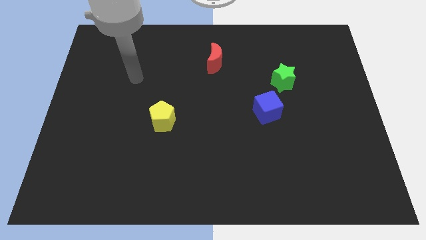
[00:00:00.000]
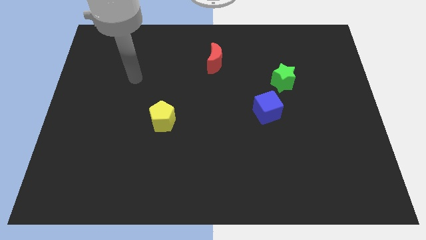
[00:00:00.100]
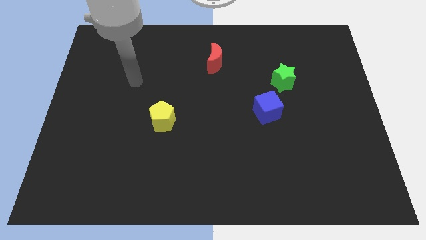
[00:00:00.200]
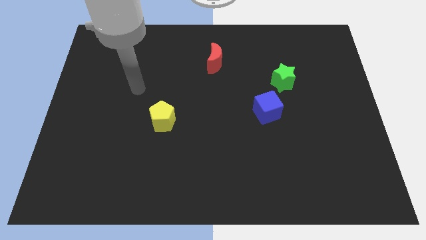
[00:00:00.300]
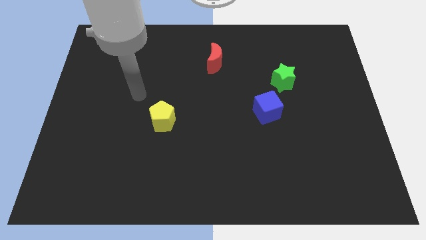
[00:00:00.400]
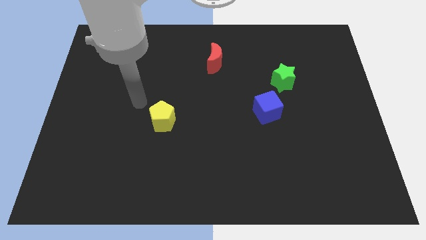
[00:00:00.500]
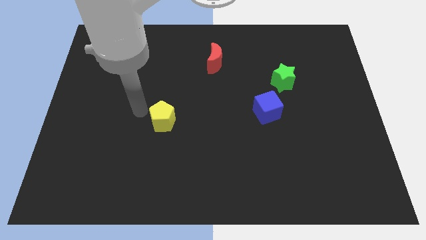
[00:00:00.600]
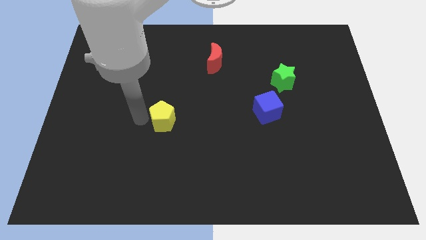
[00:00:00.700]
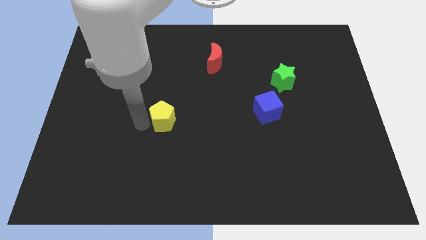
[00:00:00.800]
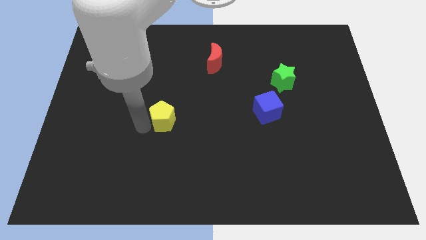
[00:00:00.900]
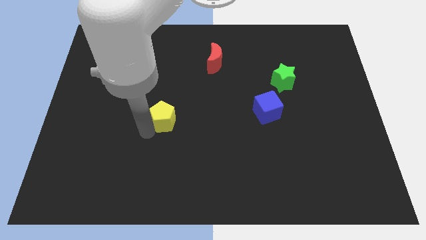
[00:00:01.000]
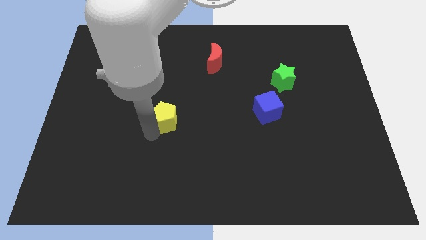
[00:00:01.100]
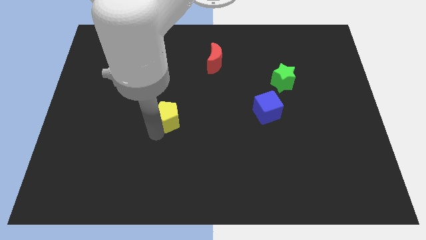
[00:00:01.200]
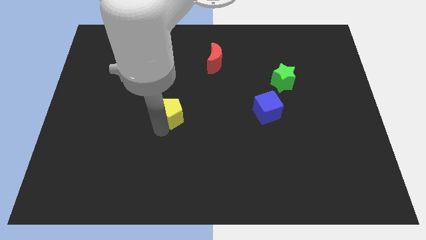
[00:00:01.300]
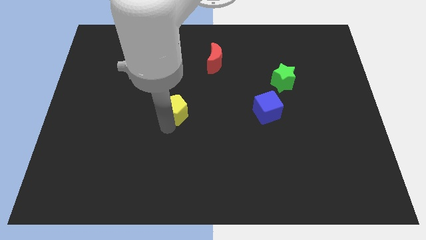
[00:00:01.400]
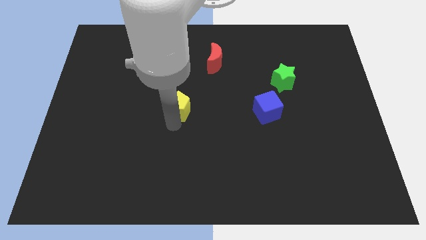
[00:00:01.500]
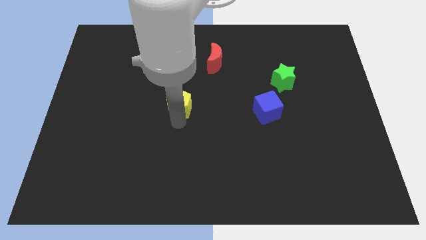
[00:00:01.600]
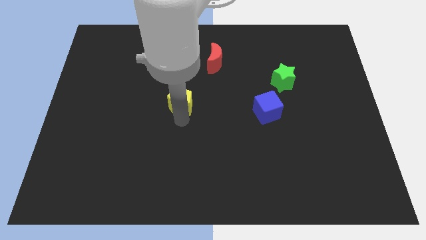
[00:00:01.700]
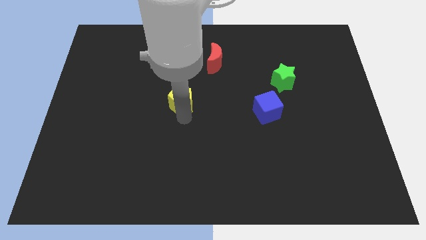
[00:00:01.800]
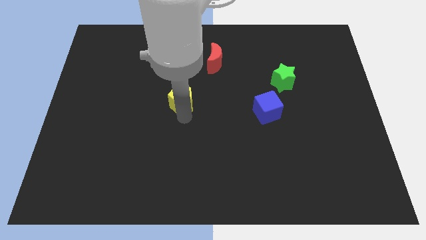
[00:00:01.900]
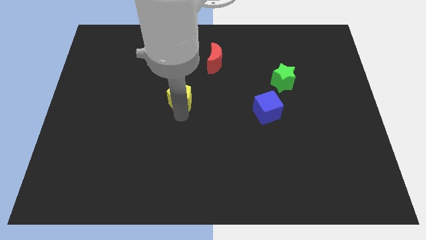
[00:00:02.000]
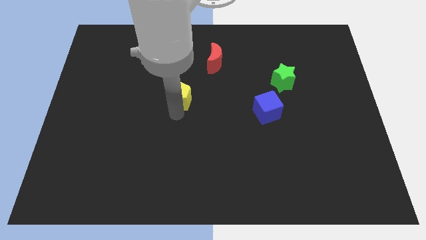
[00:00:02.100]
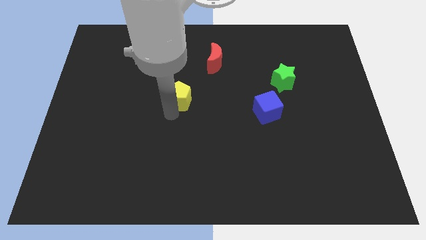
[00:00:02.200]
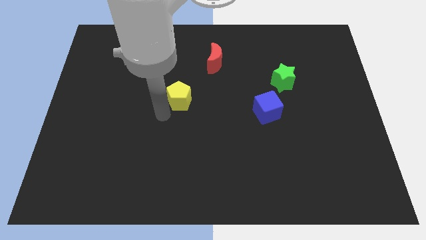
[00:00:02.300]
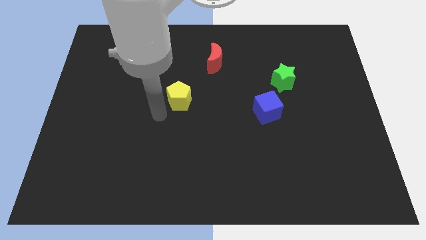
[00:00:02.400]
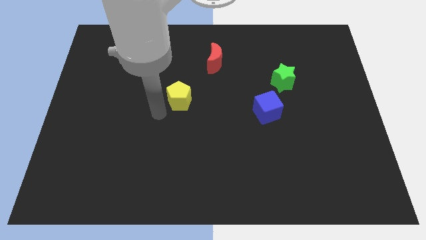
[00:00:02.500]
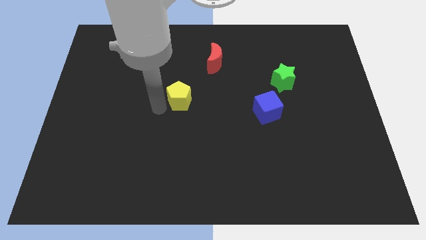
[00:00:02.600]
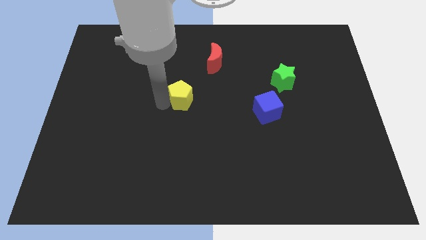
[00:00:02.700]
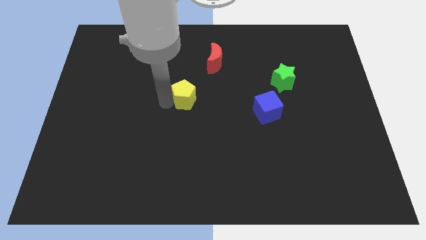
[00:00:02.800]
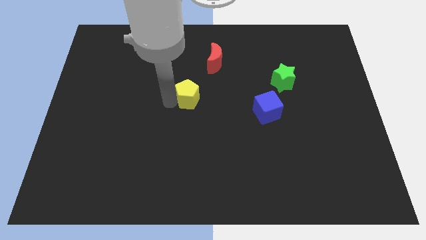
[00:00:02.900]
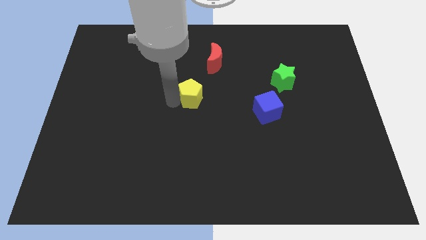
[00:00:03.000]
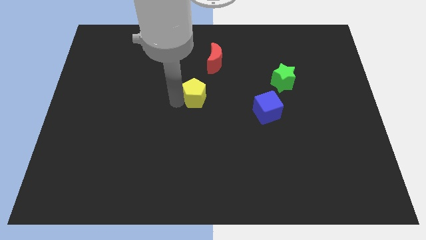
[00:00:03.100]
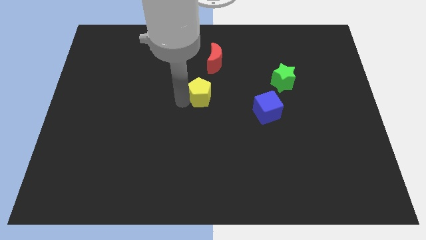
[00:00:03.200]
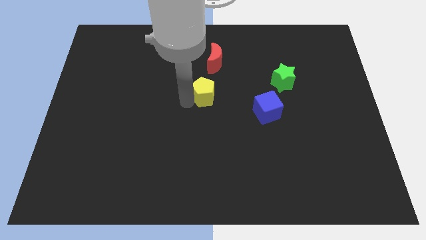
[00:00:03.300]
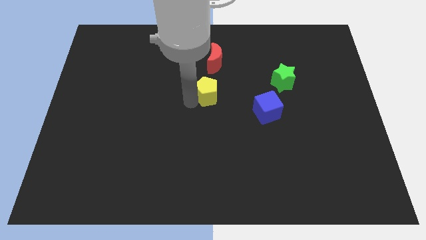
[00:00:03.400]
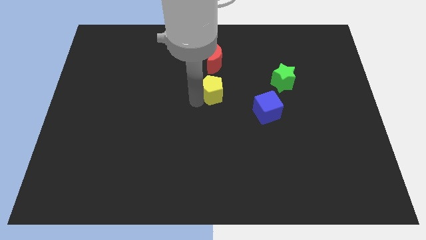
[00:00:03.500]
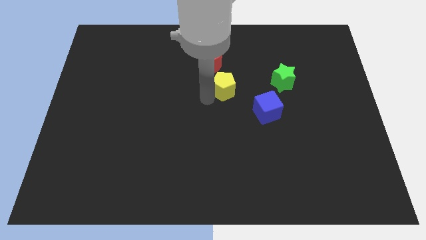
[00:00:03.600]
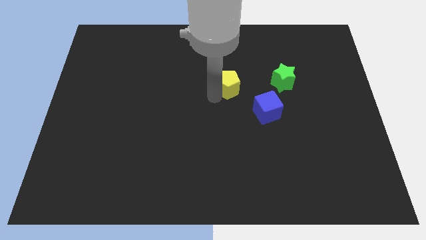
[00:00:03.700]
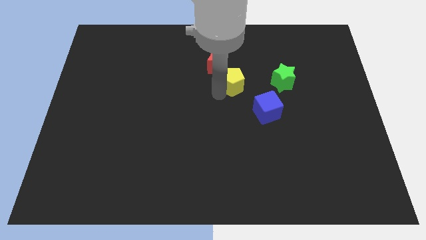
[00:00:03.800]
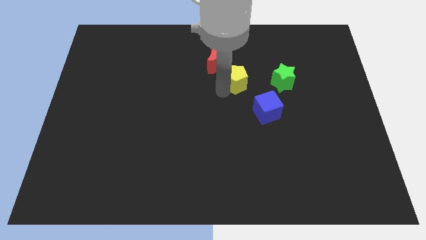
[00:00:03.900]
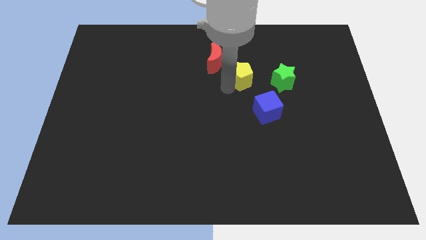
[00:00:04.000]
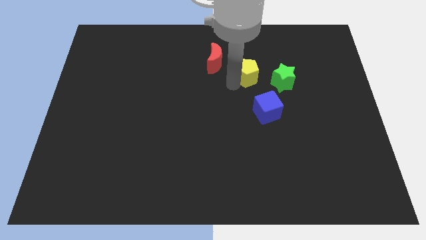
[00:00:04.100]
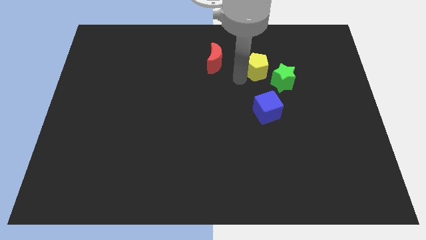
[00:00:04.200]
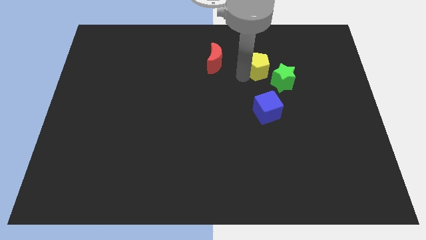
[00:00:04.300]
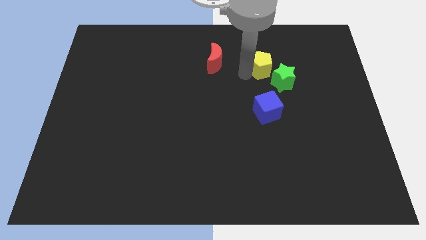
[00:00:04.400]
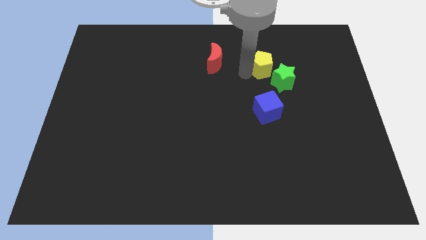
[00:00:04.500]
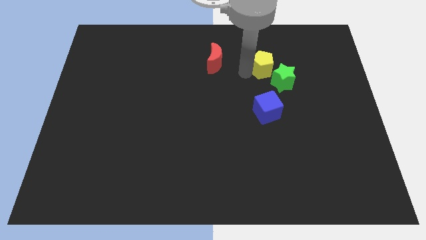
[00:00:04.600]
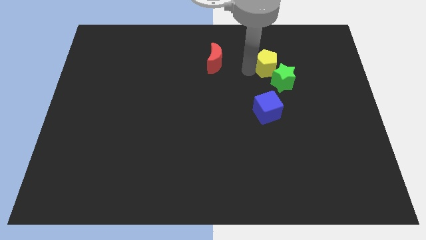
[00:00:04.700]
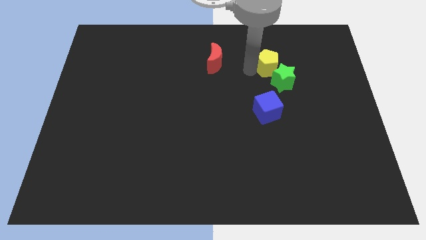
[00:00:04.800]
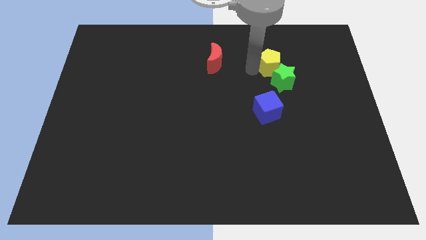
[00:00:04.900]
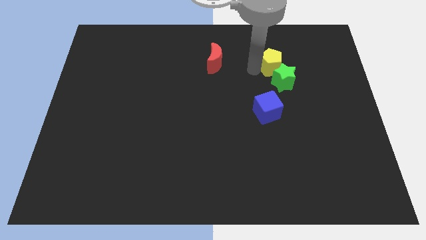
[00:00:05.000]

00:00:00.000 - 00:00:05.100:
slide the yellow block to the green block

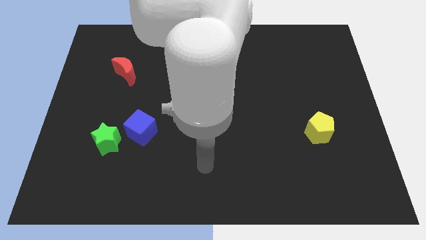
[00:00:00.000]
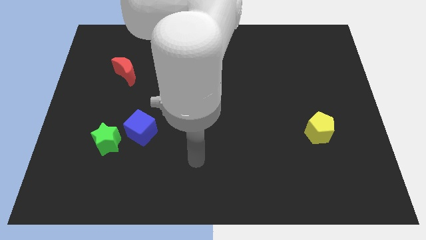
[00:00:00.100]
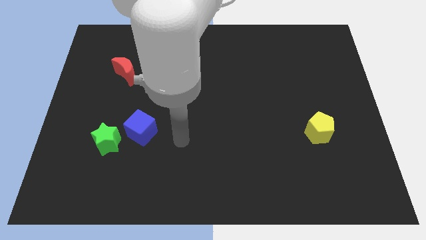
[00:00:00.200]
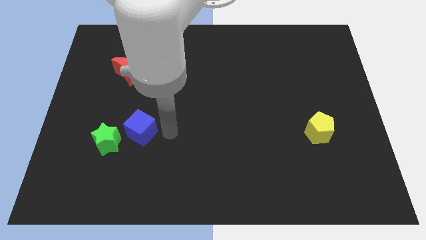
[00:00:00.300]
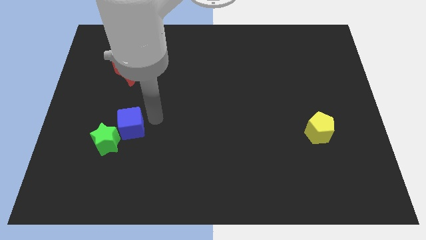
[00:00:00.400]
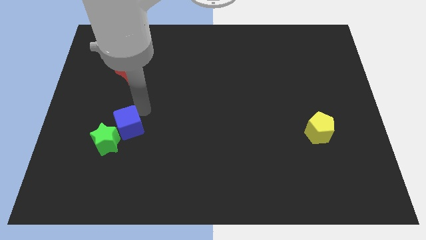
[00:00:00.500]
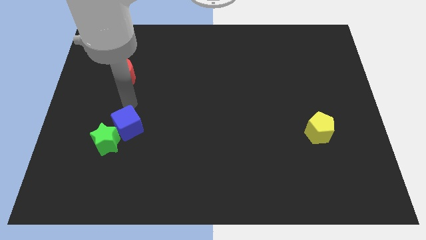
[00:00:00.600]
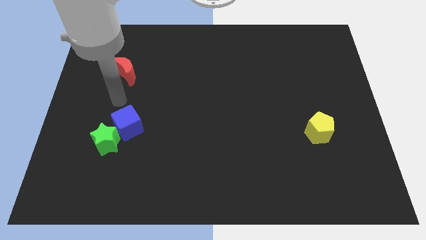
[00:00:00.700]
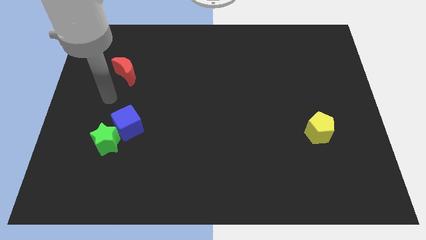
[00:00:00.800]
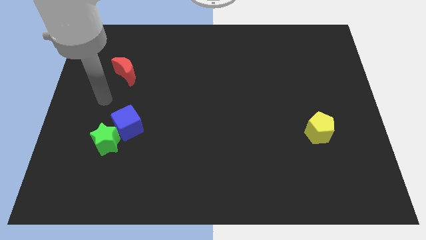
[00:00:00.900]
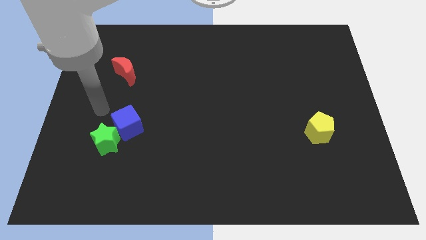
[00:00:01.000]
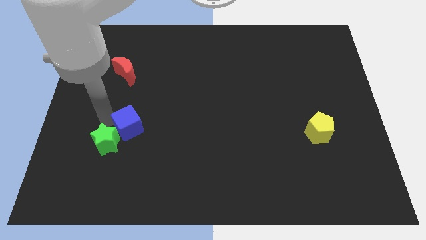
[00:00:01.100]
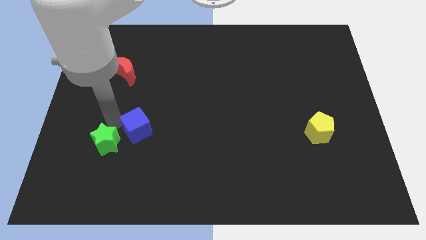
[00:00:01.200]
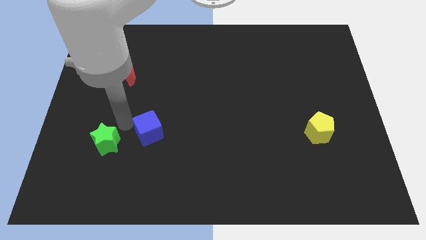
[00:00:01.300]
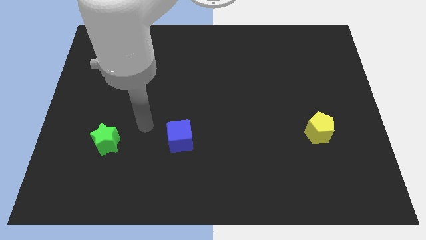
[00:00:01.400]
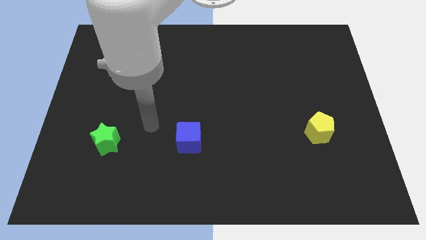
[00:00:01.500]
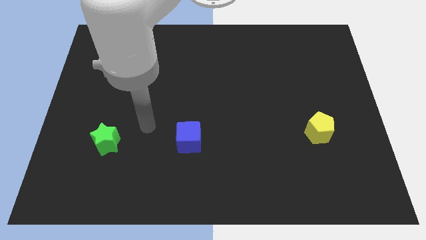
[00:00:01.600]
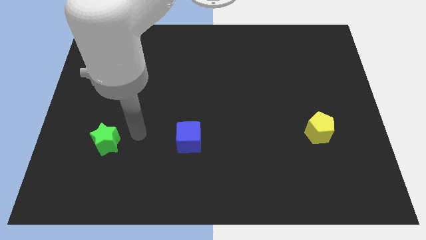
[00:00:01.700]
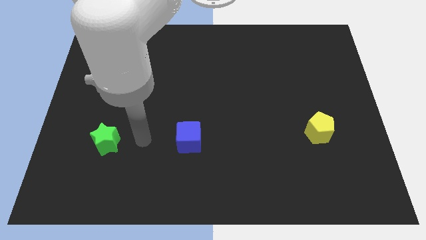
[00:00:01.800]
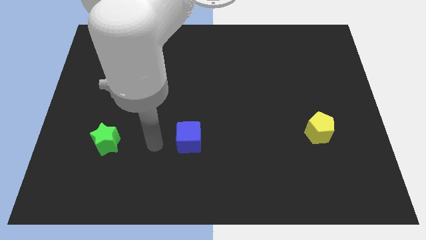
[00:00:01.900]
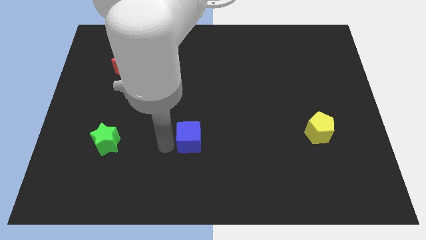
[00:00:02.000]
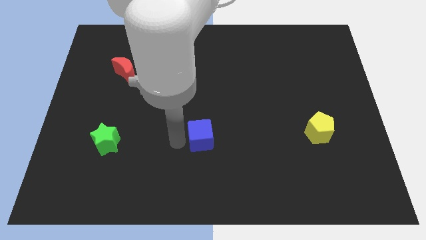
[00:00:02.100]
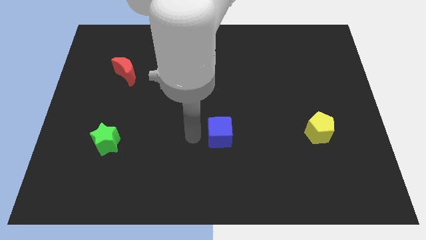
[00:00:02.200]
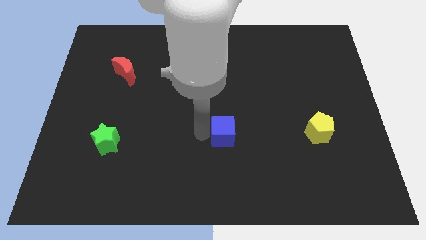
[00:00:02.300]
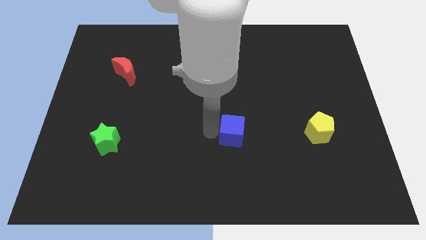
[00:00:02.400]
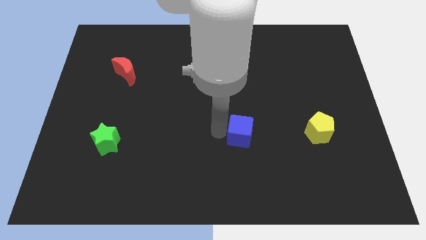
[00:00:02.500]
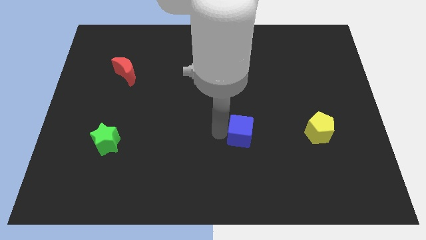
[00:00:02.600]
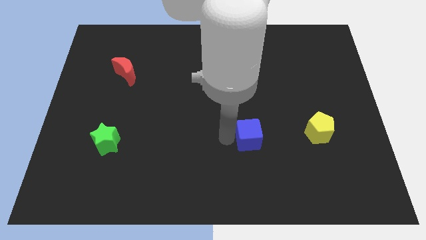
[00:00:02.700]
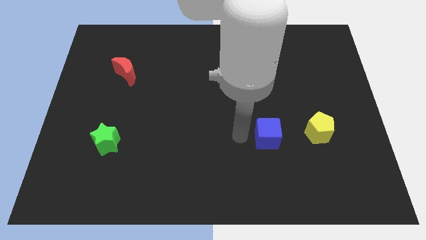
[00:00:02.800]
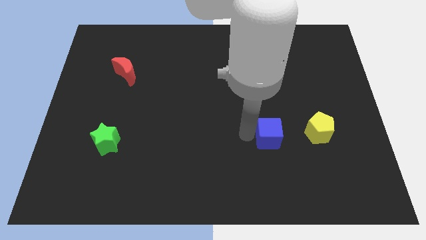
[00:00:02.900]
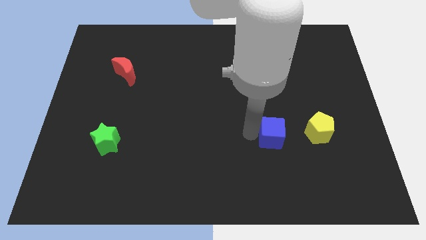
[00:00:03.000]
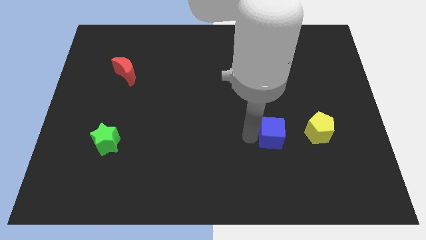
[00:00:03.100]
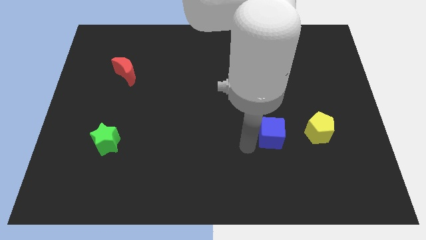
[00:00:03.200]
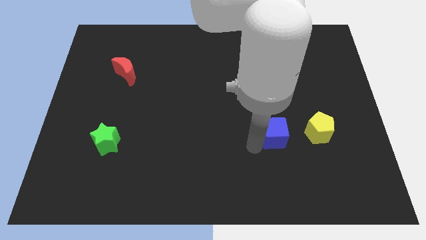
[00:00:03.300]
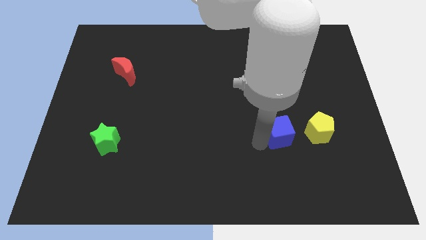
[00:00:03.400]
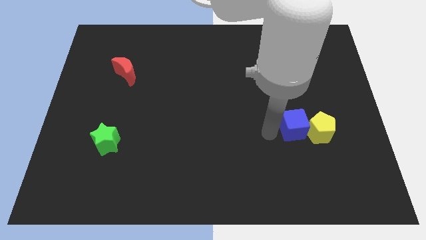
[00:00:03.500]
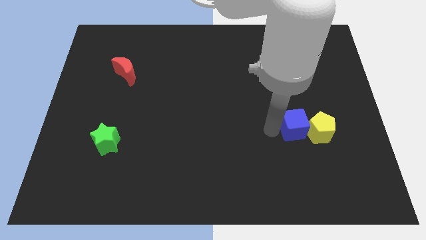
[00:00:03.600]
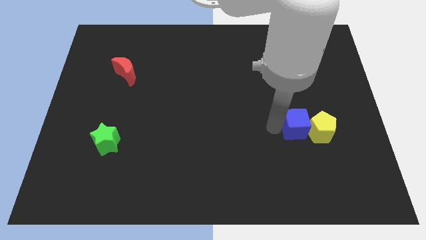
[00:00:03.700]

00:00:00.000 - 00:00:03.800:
move the blue cube towards the yellow pentagon
